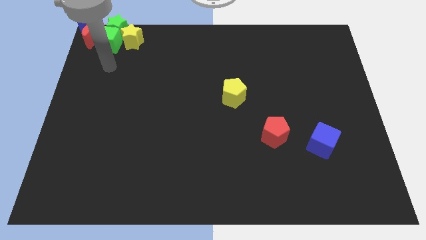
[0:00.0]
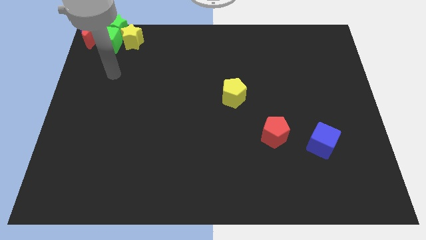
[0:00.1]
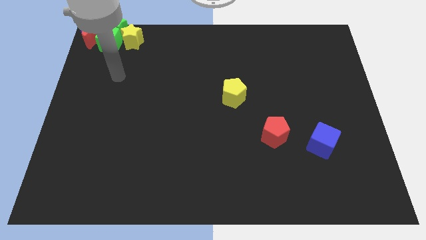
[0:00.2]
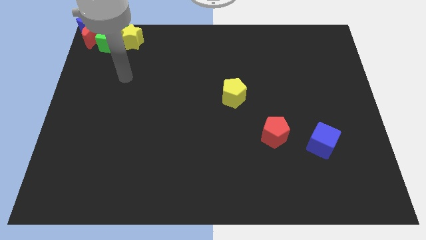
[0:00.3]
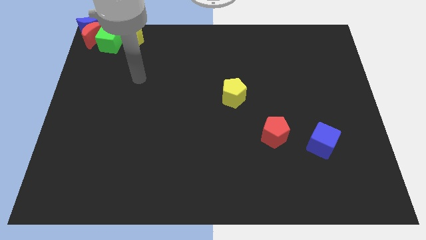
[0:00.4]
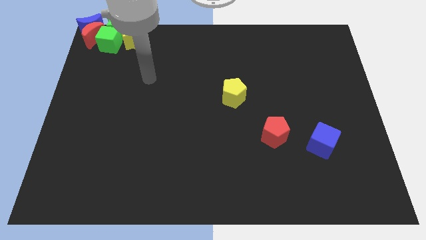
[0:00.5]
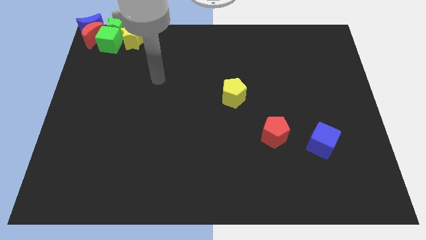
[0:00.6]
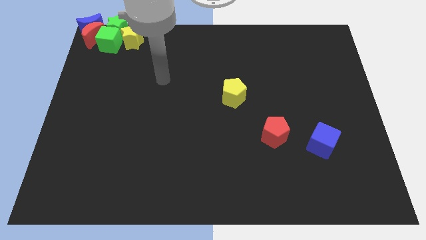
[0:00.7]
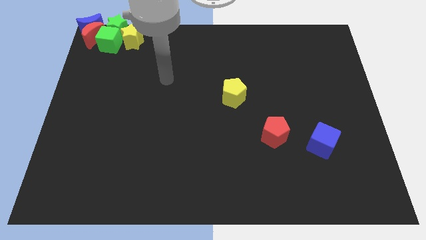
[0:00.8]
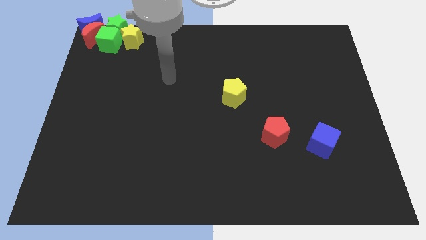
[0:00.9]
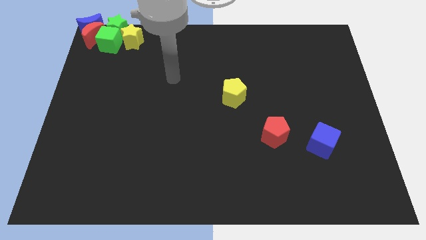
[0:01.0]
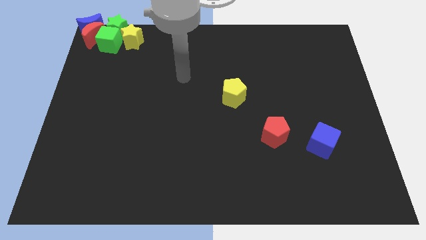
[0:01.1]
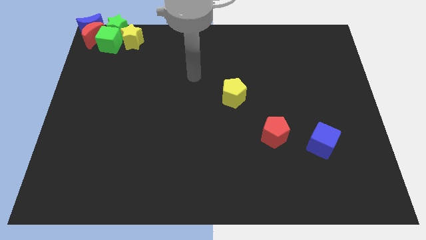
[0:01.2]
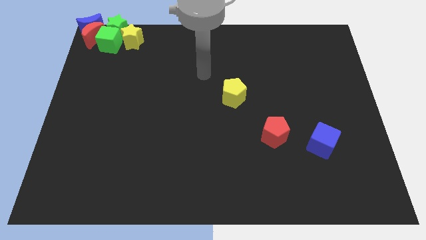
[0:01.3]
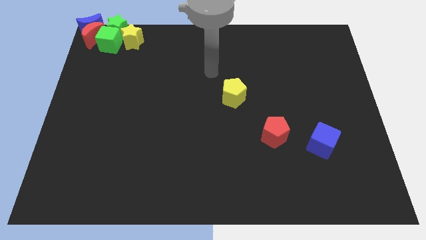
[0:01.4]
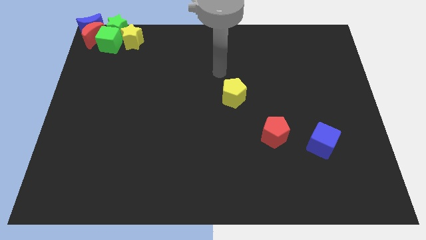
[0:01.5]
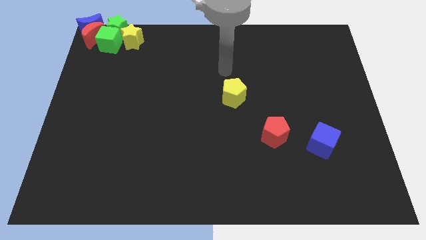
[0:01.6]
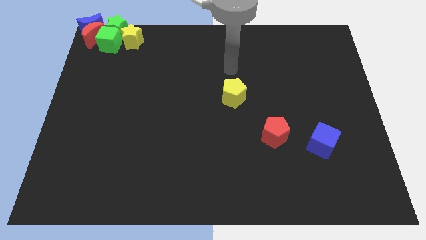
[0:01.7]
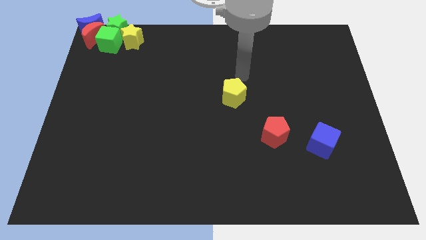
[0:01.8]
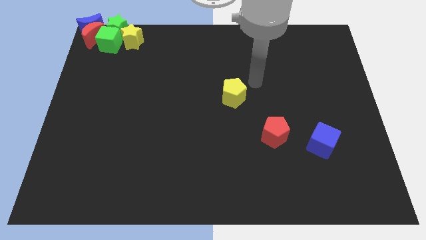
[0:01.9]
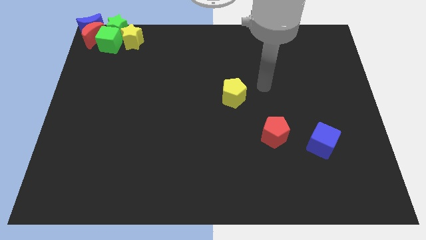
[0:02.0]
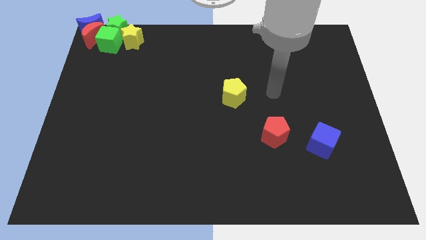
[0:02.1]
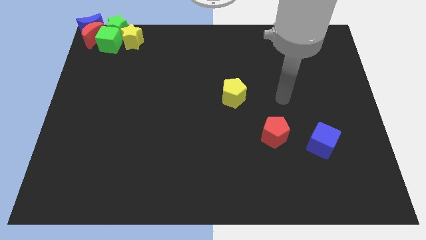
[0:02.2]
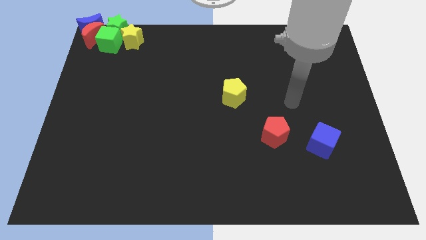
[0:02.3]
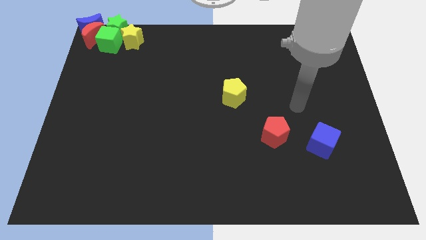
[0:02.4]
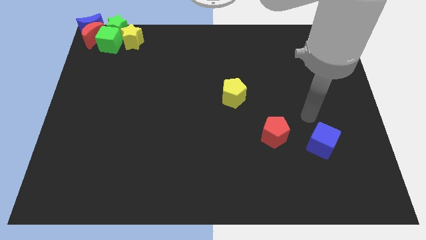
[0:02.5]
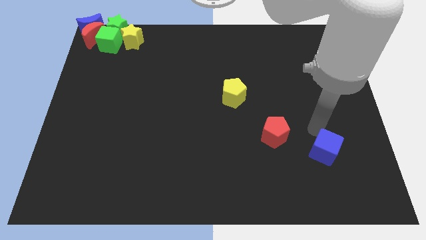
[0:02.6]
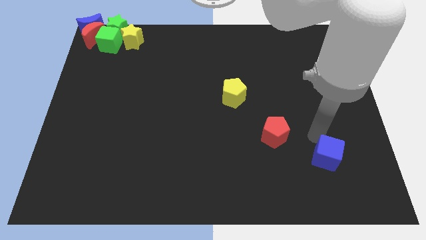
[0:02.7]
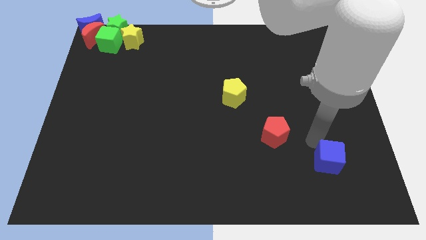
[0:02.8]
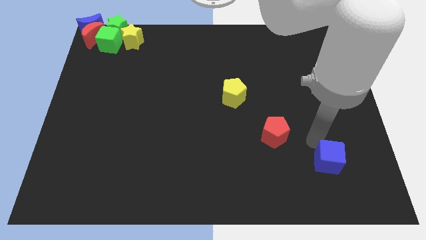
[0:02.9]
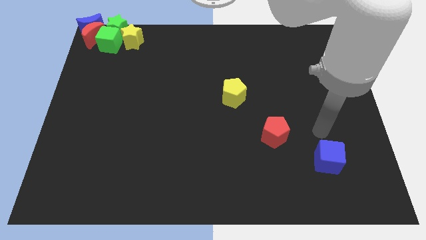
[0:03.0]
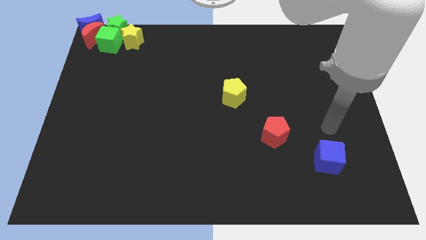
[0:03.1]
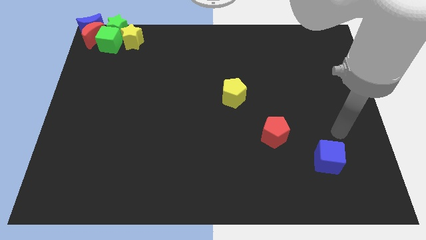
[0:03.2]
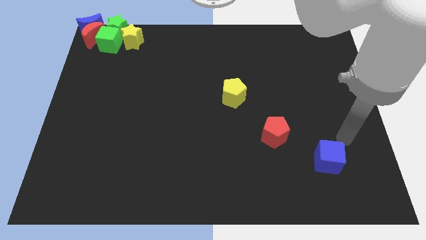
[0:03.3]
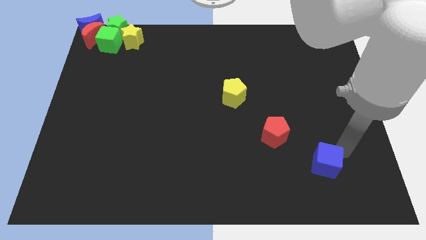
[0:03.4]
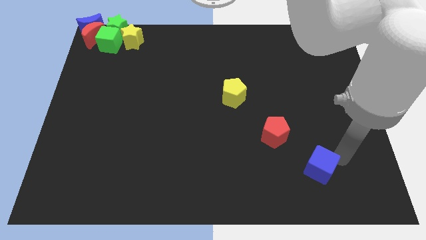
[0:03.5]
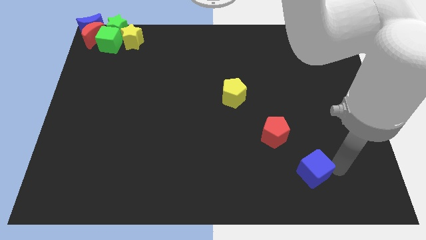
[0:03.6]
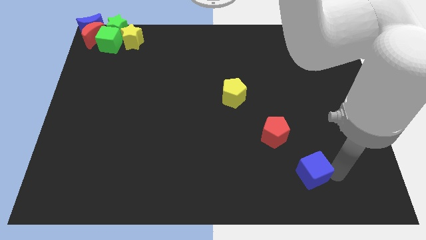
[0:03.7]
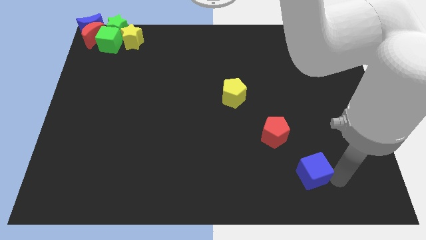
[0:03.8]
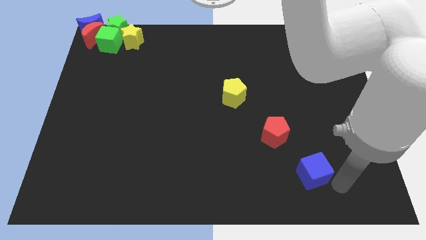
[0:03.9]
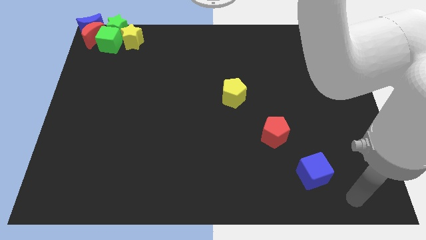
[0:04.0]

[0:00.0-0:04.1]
place the blue cube diagonally below the bottom left side of the red pentagon

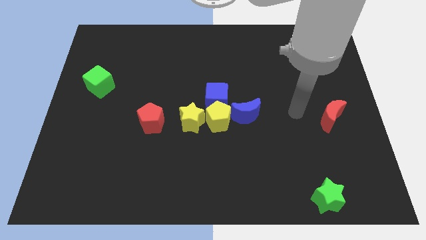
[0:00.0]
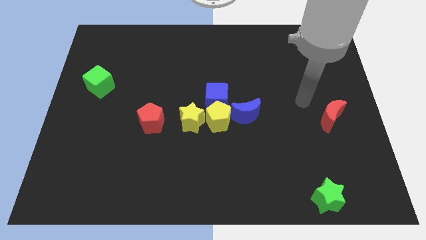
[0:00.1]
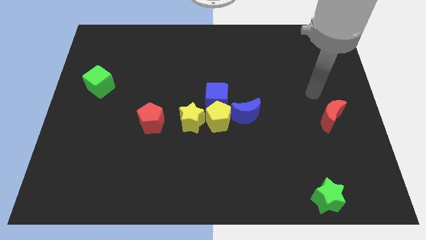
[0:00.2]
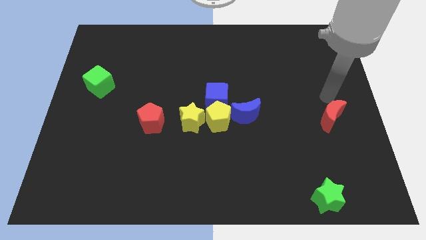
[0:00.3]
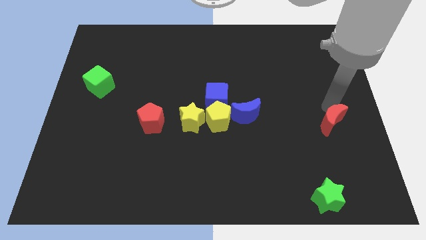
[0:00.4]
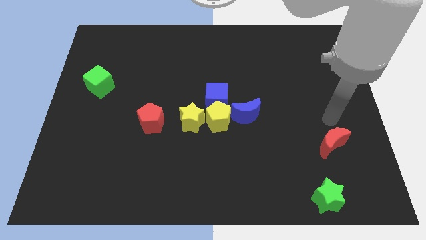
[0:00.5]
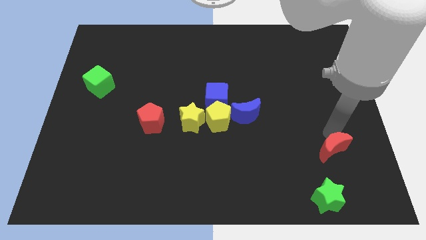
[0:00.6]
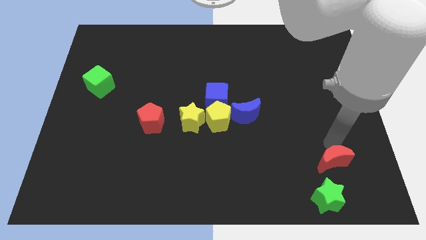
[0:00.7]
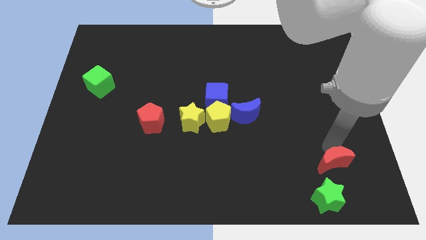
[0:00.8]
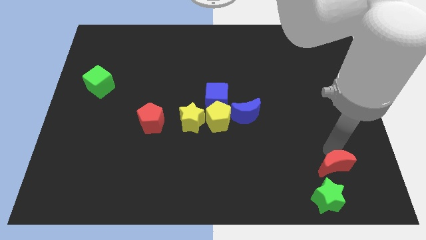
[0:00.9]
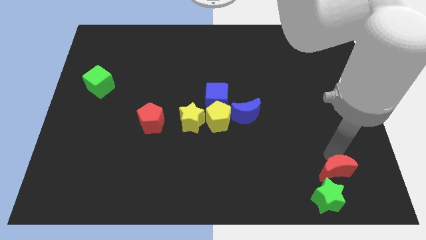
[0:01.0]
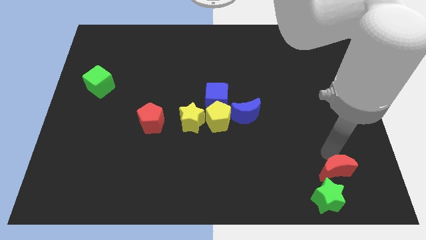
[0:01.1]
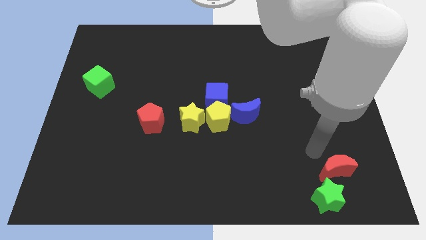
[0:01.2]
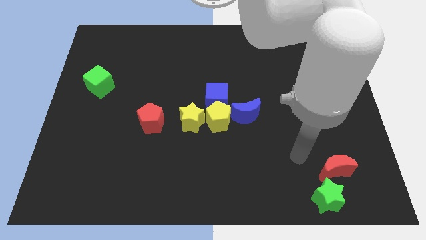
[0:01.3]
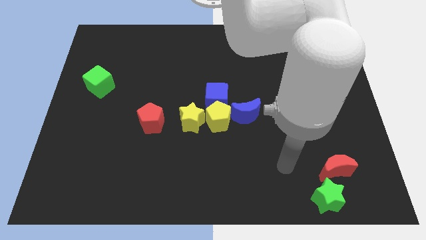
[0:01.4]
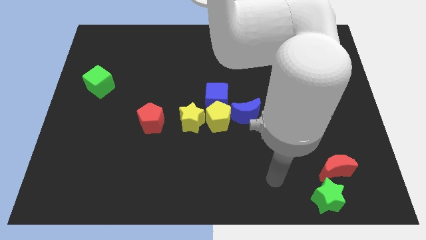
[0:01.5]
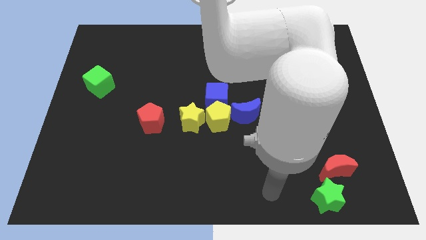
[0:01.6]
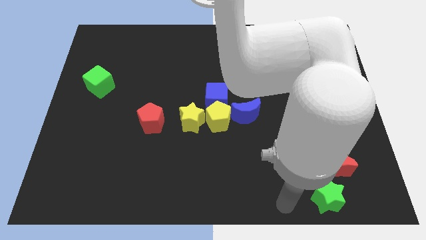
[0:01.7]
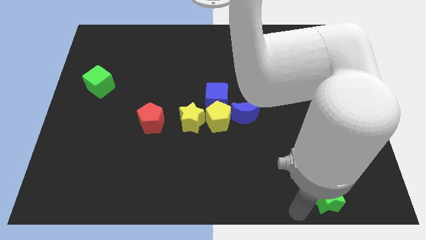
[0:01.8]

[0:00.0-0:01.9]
move the red moon close to the green star

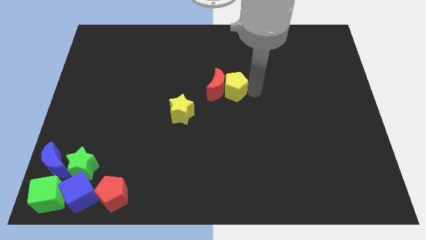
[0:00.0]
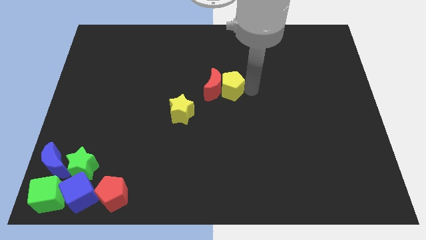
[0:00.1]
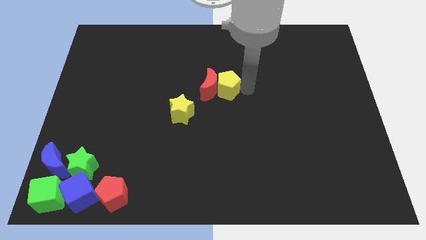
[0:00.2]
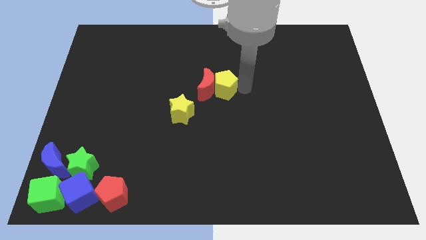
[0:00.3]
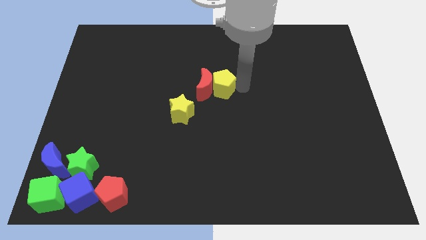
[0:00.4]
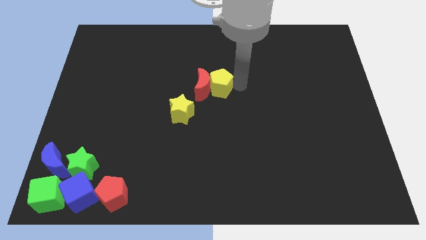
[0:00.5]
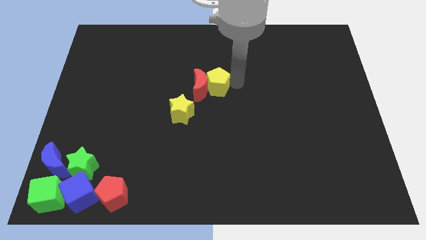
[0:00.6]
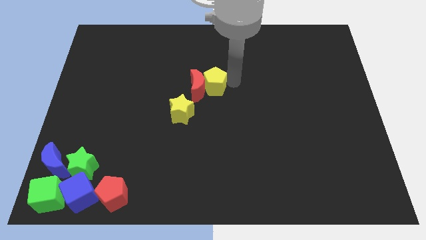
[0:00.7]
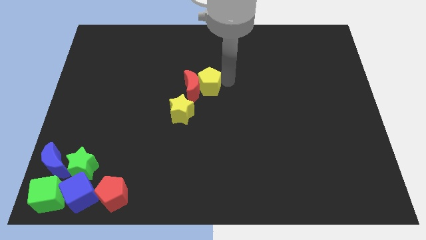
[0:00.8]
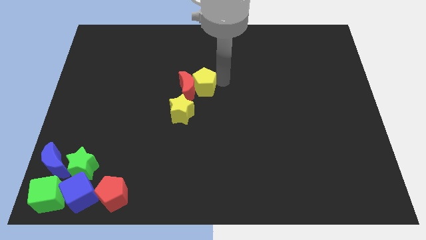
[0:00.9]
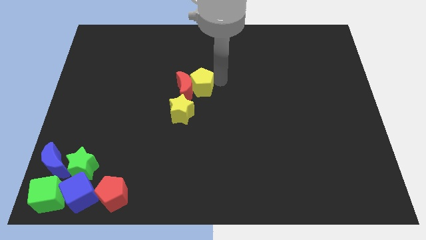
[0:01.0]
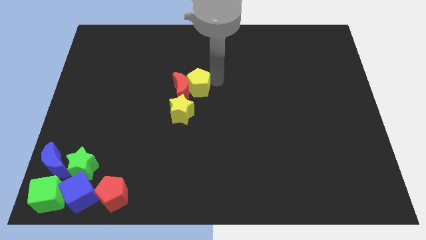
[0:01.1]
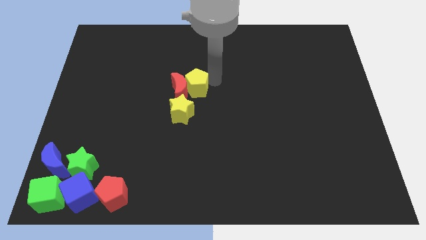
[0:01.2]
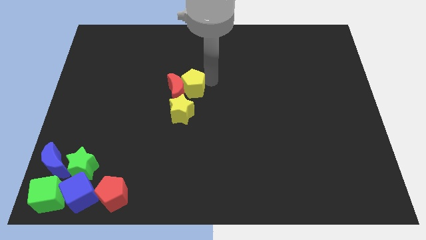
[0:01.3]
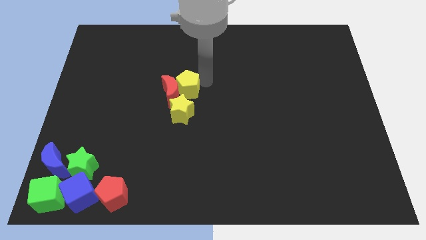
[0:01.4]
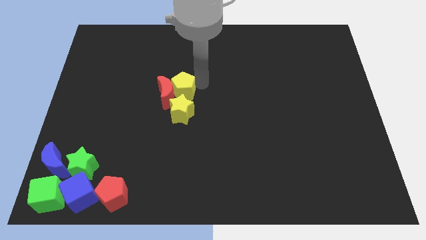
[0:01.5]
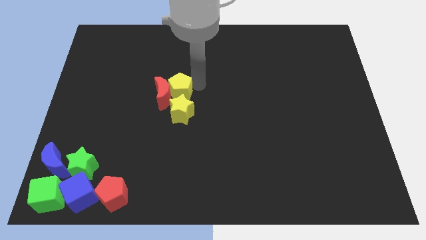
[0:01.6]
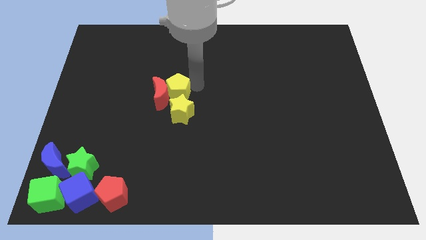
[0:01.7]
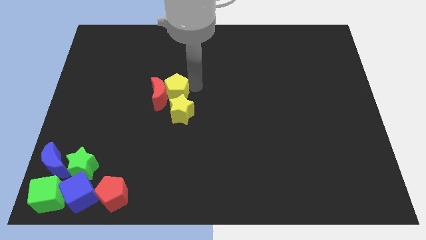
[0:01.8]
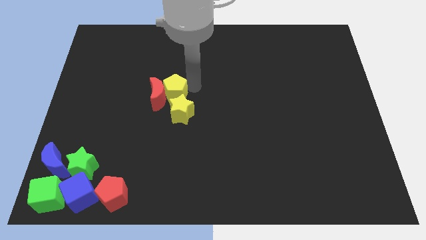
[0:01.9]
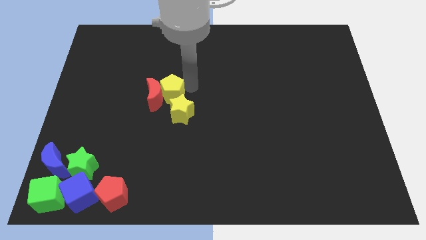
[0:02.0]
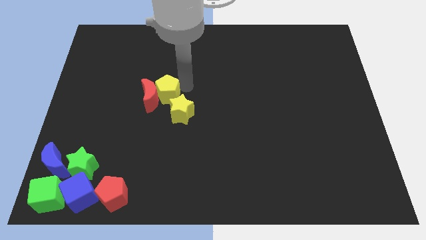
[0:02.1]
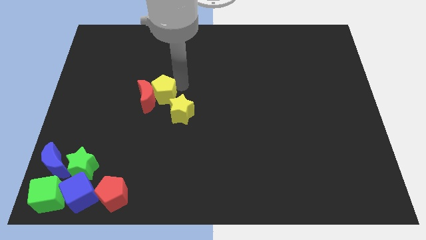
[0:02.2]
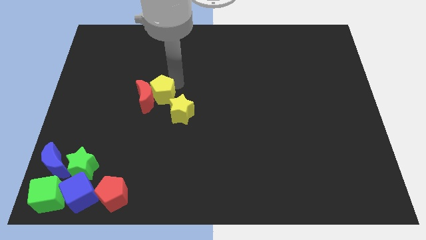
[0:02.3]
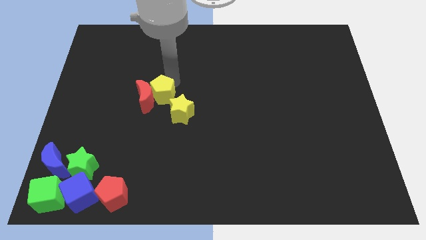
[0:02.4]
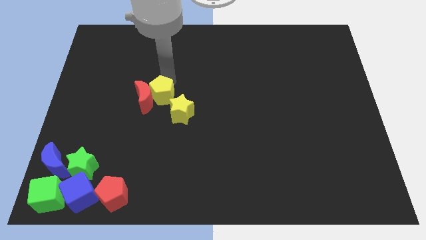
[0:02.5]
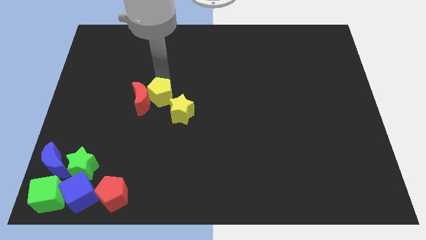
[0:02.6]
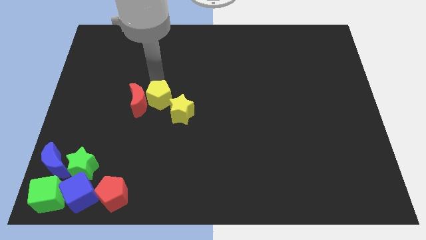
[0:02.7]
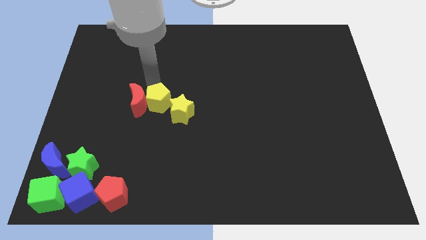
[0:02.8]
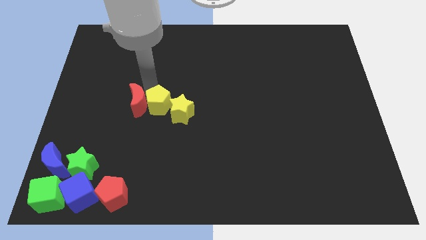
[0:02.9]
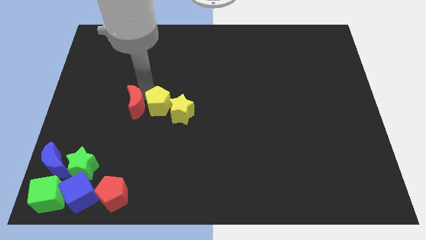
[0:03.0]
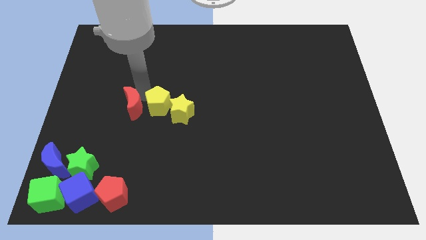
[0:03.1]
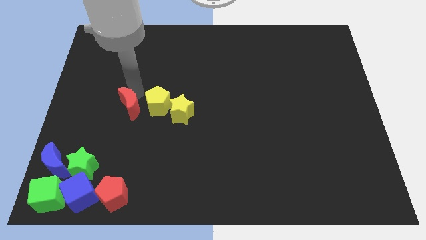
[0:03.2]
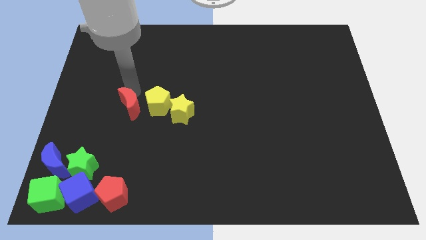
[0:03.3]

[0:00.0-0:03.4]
make a horizontal line out of yellow star and the red moon
